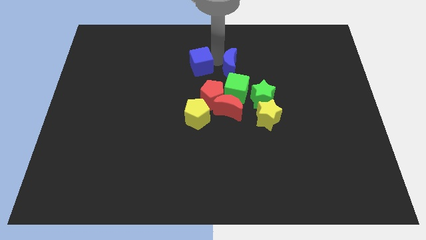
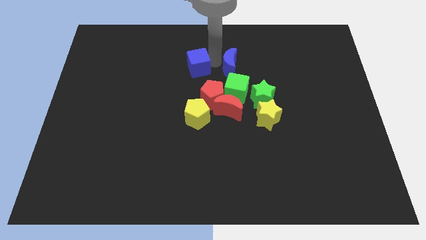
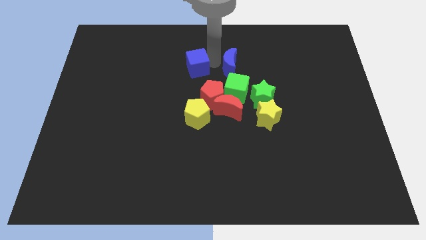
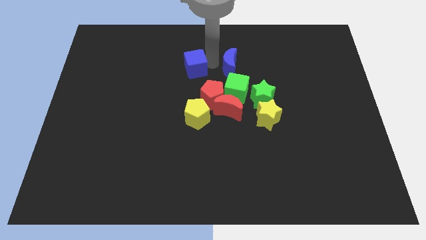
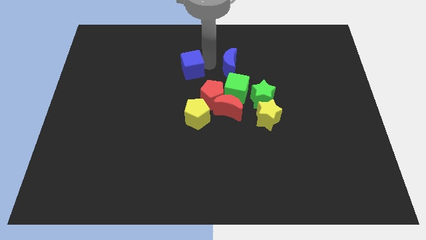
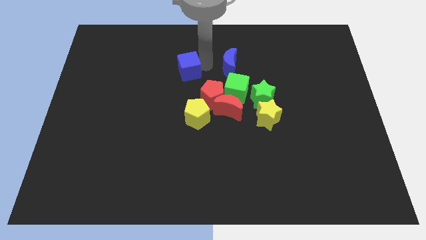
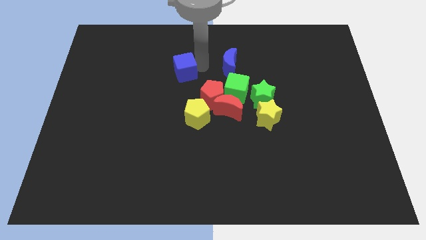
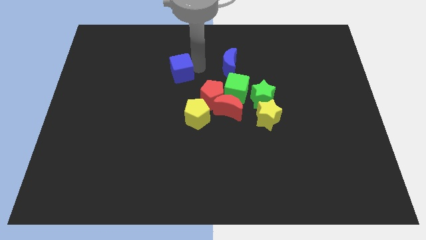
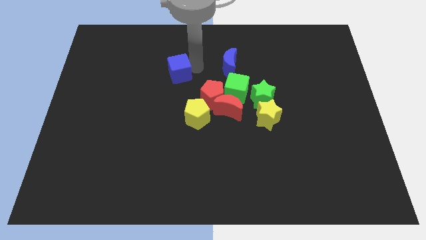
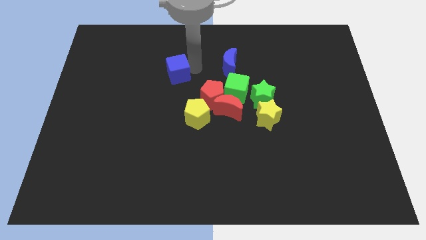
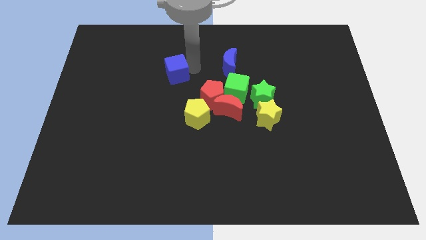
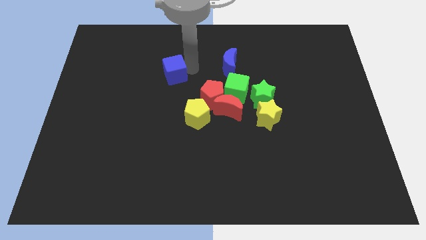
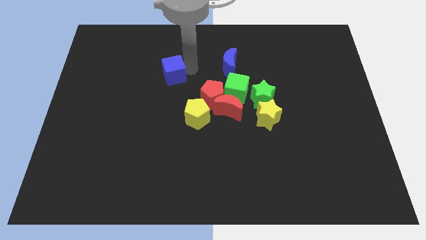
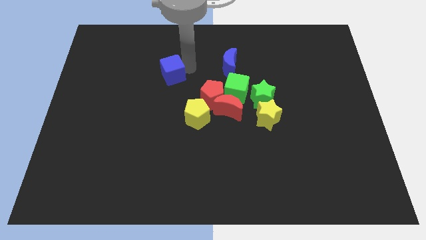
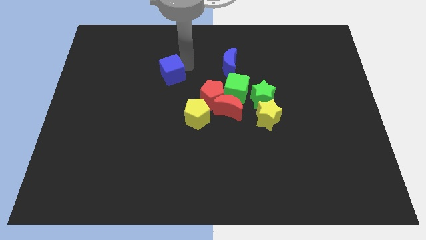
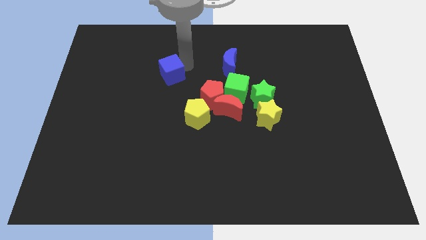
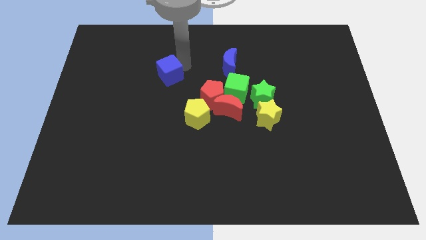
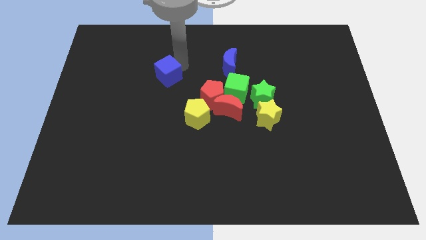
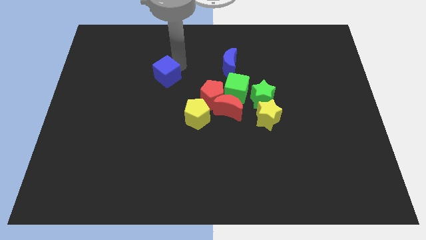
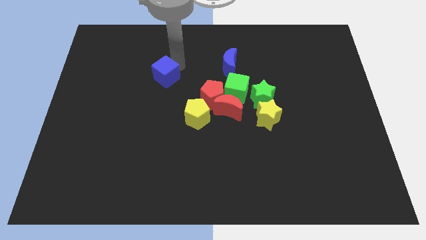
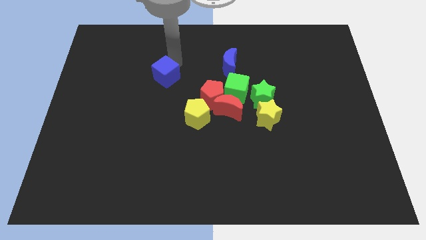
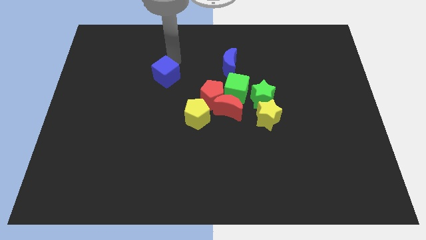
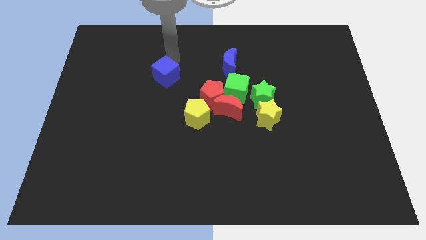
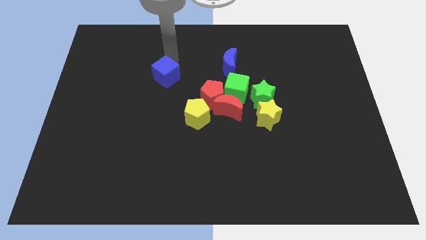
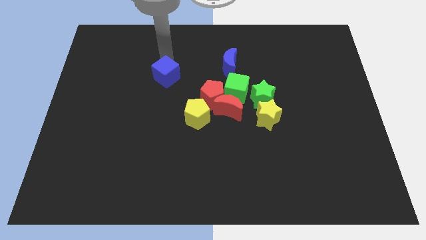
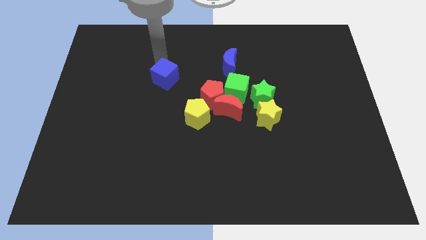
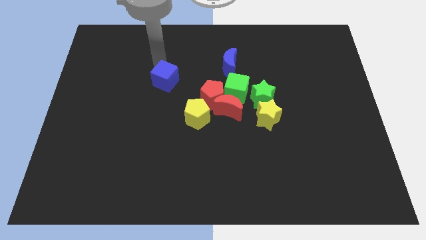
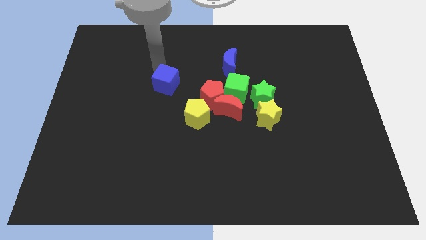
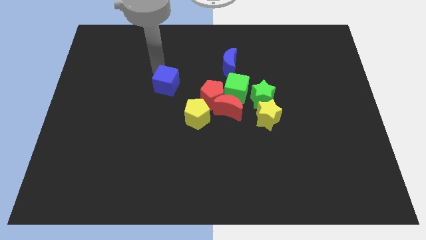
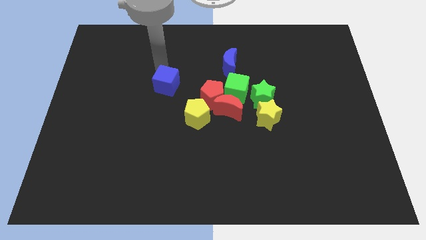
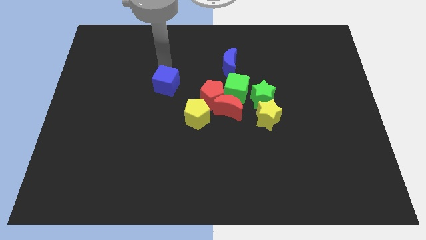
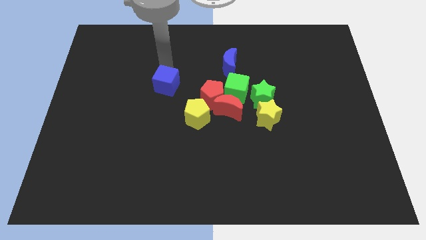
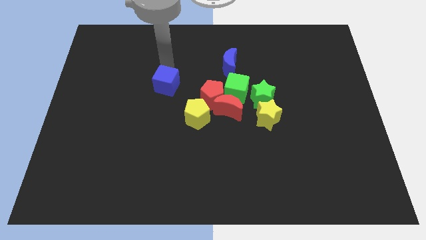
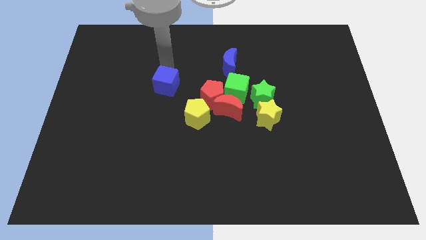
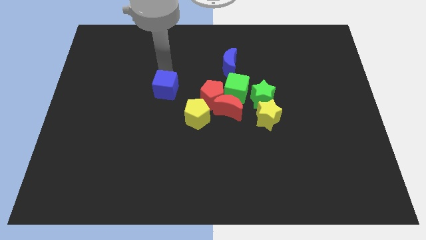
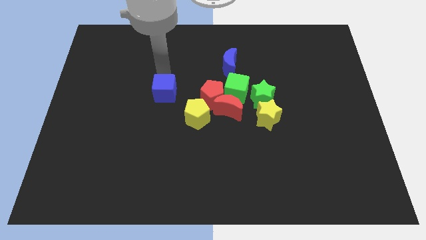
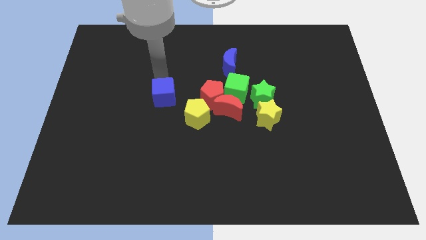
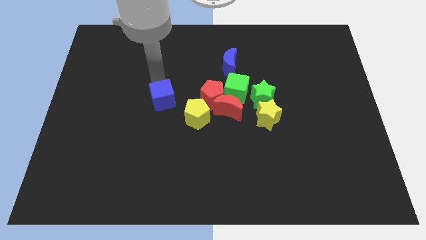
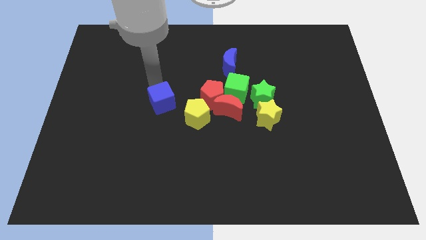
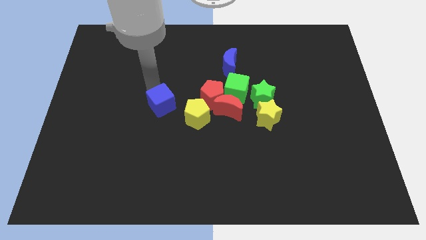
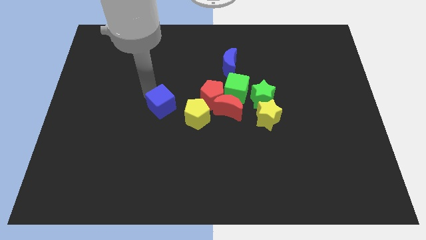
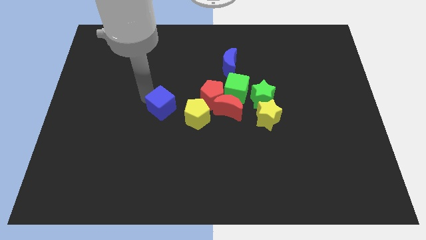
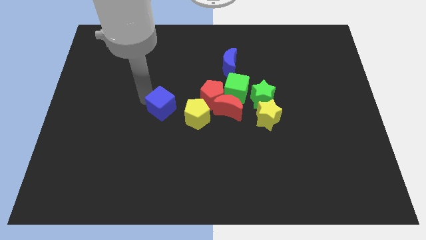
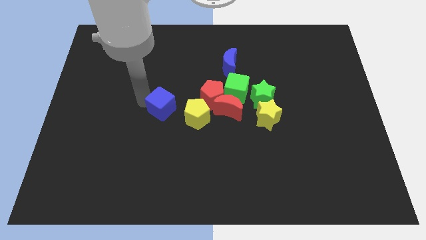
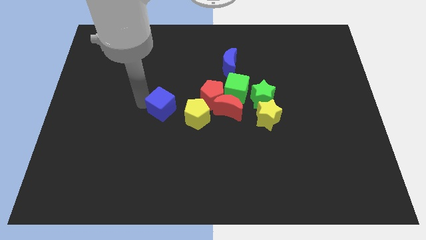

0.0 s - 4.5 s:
push the blue cube towards the left side of the yellow pentagon

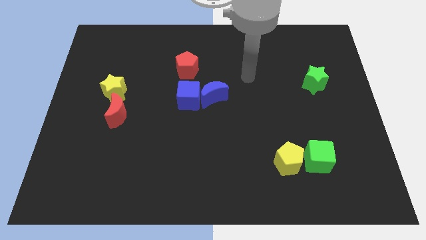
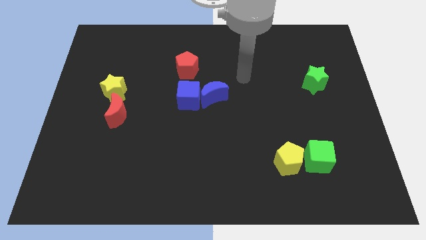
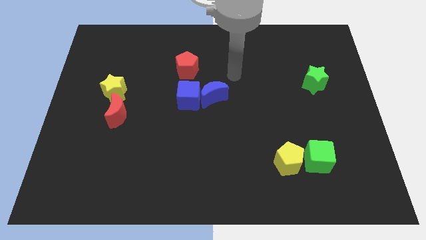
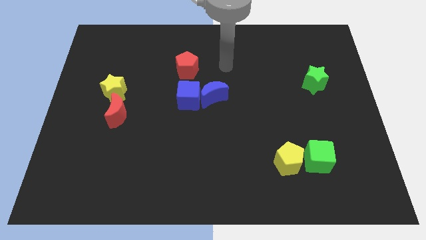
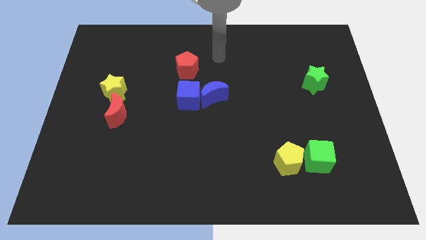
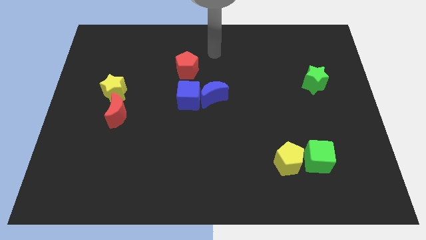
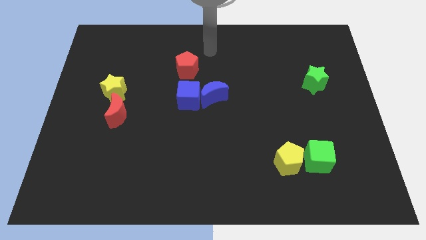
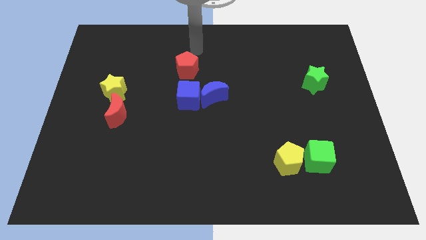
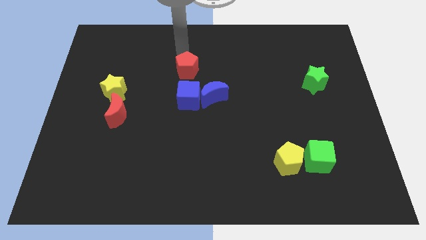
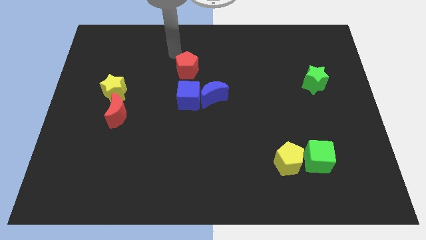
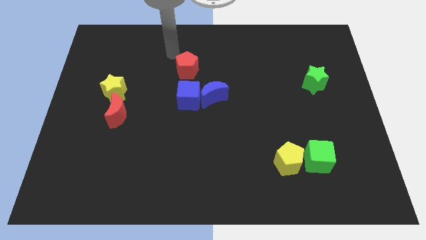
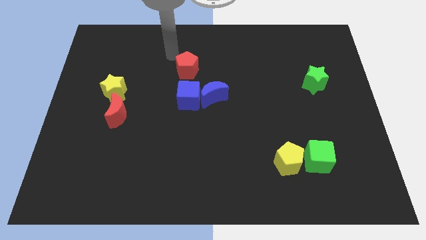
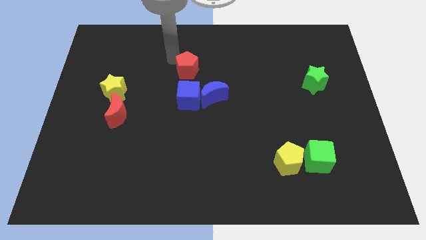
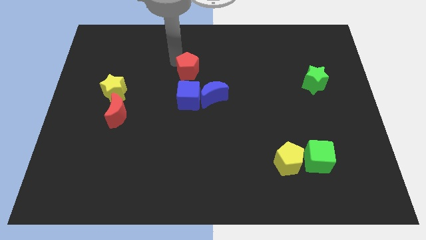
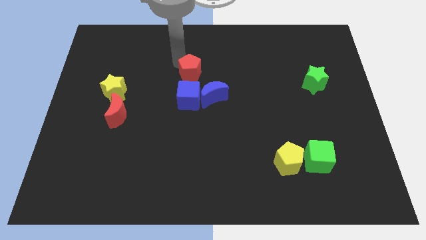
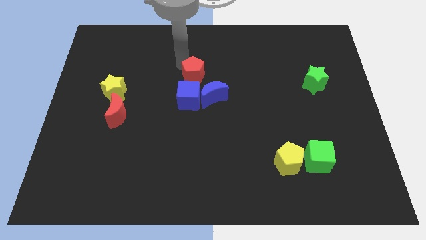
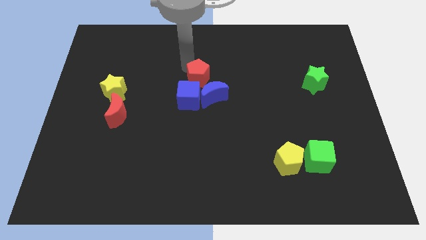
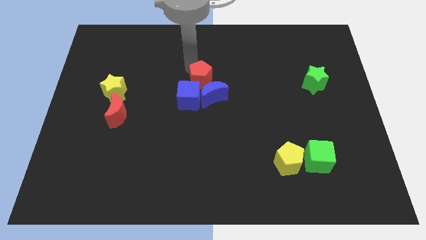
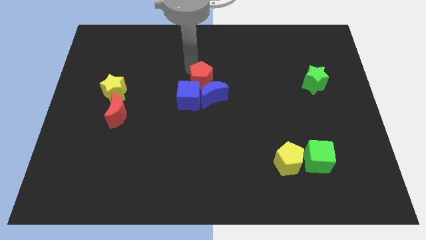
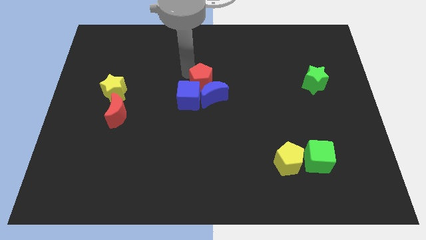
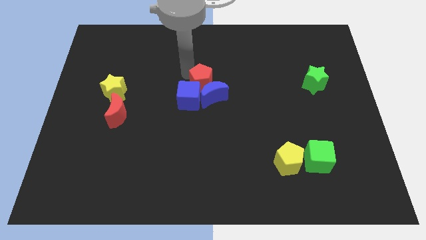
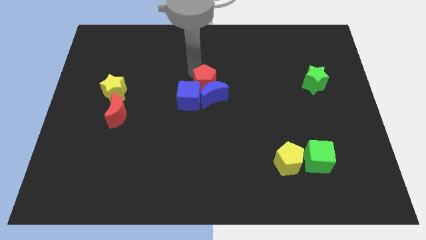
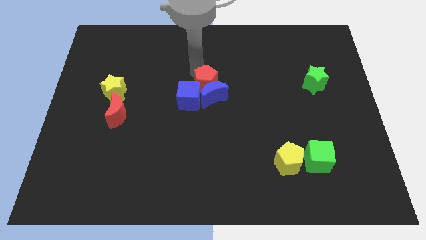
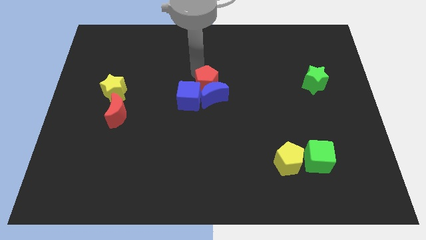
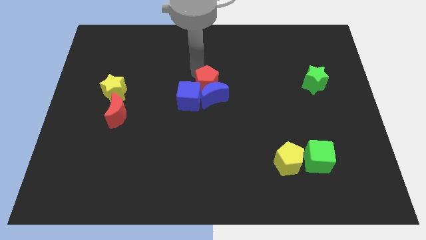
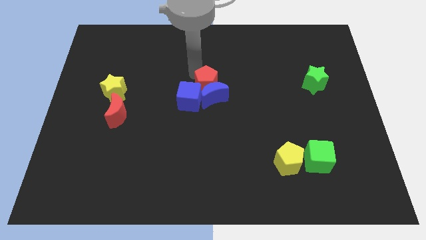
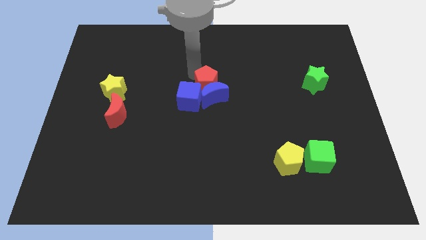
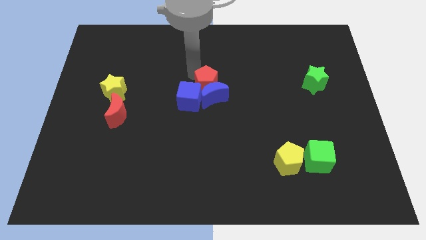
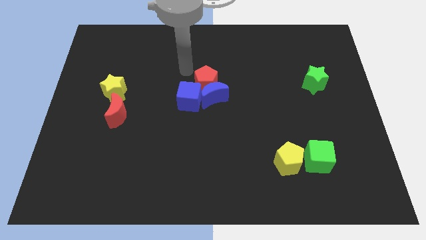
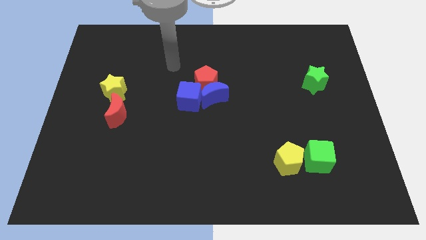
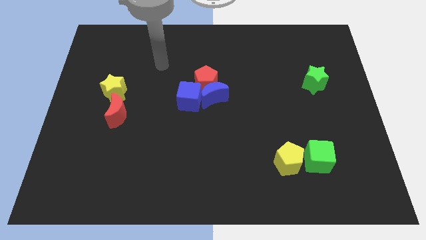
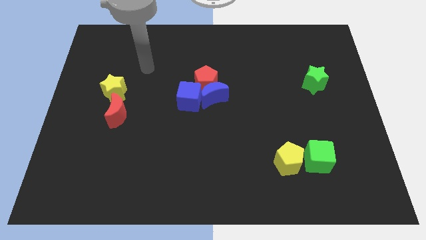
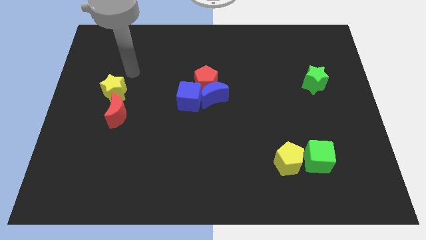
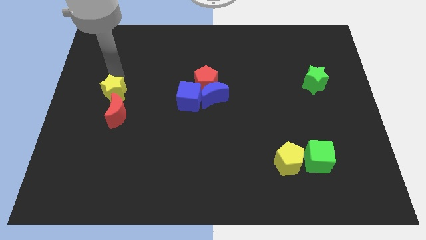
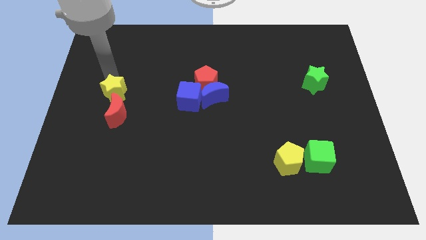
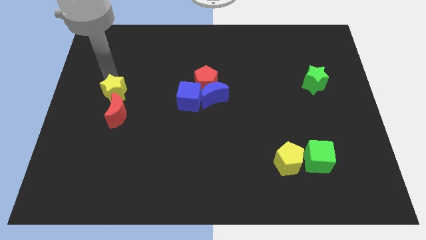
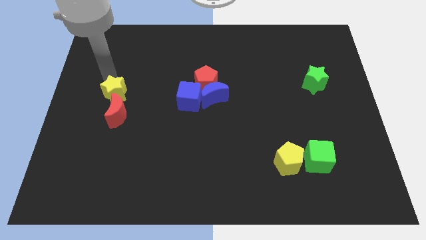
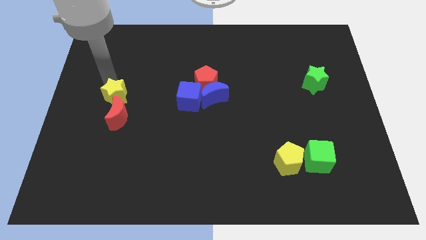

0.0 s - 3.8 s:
push the red pentagon into the blue crescent

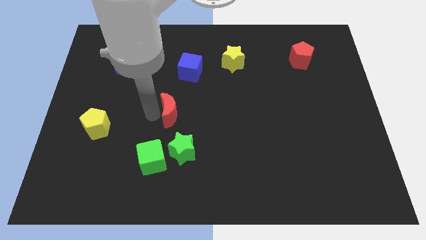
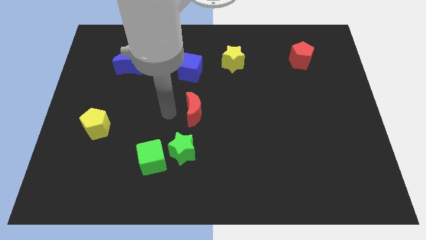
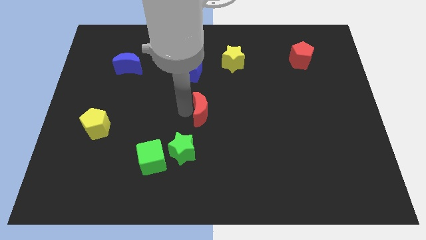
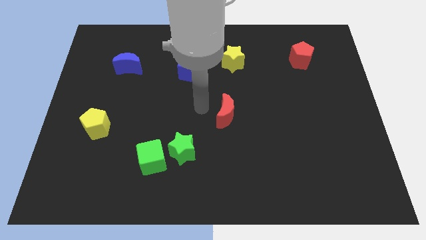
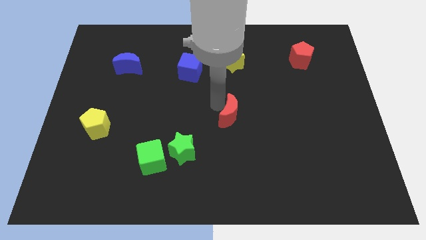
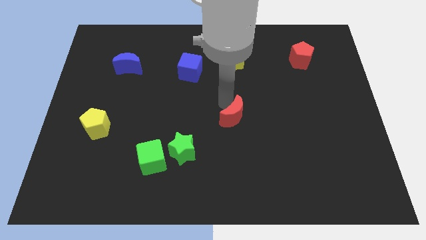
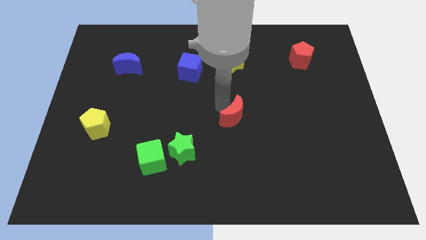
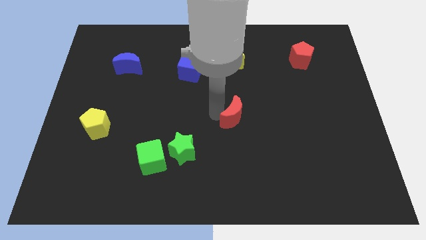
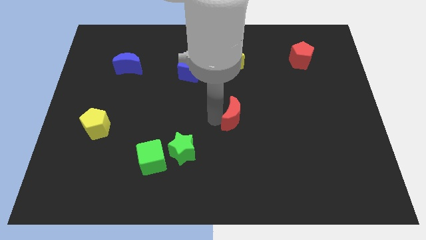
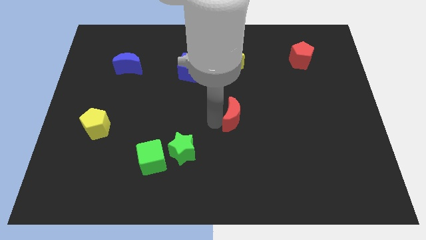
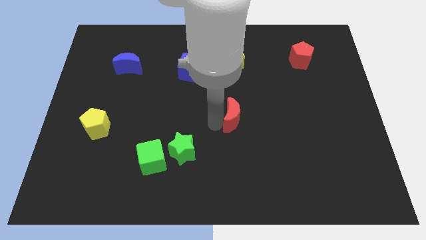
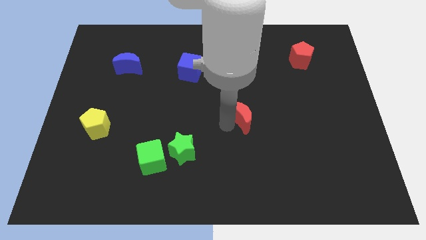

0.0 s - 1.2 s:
move the red crescent to the center of the board
